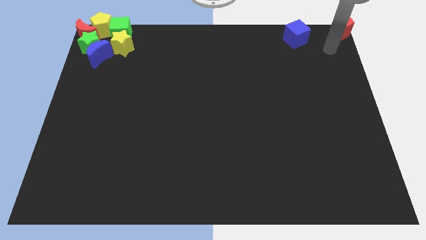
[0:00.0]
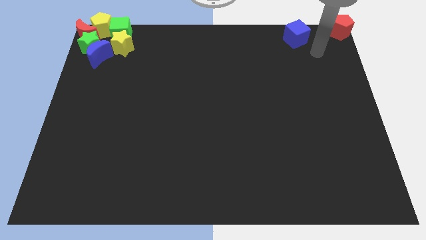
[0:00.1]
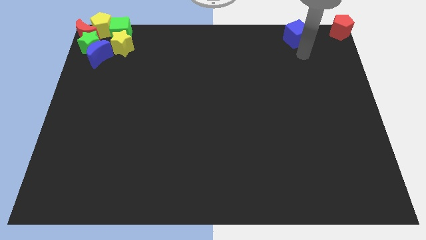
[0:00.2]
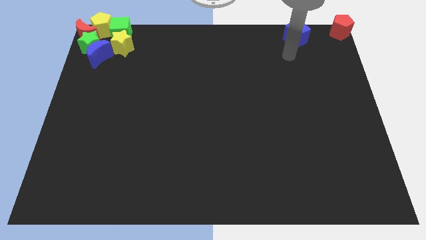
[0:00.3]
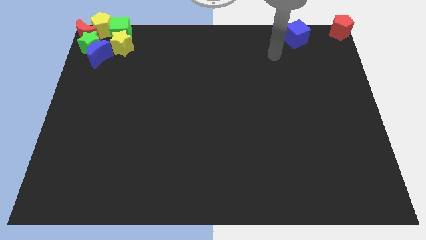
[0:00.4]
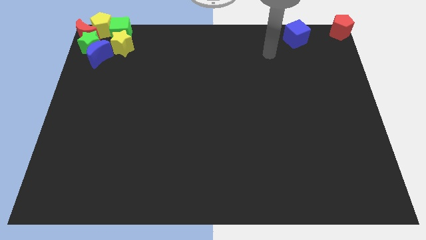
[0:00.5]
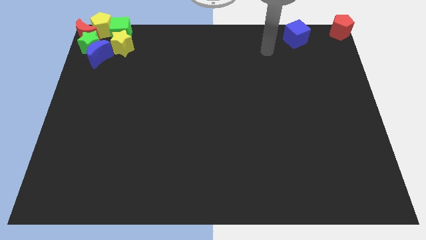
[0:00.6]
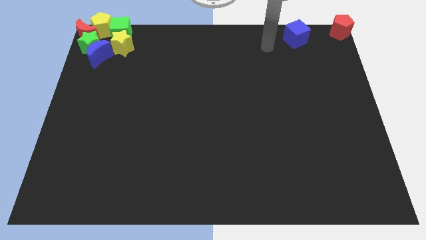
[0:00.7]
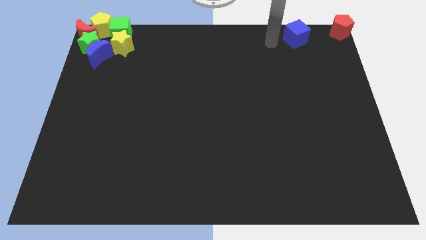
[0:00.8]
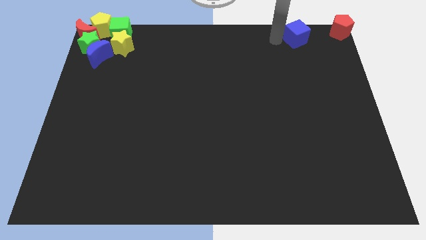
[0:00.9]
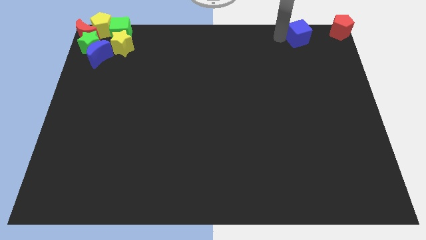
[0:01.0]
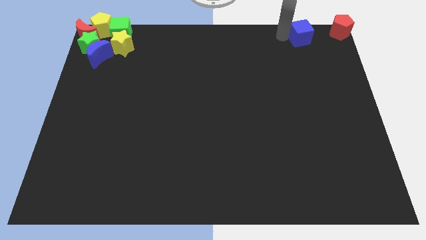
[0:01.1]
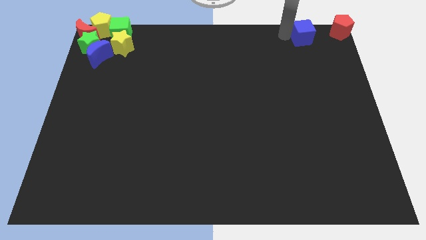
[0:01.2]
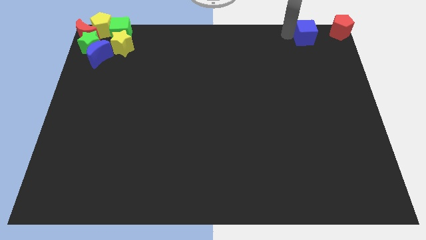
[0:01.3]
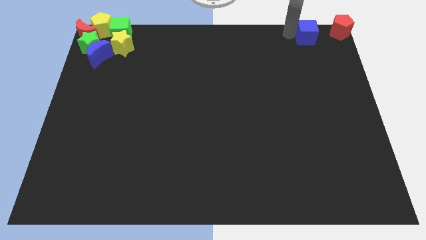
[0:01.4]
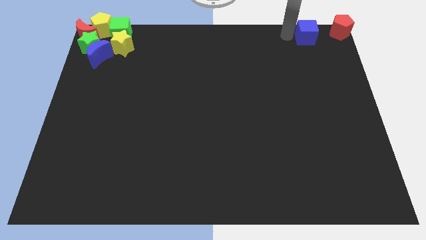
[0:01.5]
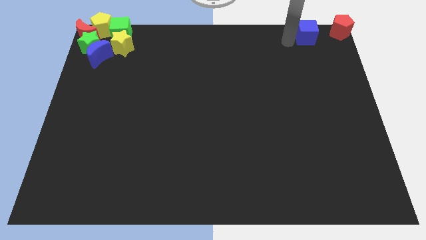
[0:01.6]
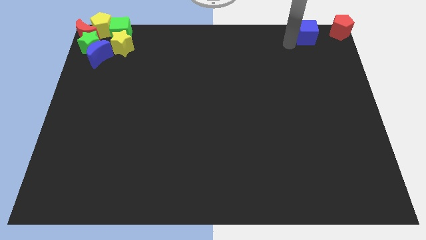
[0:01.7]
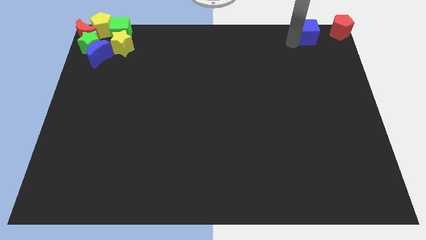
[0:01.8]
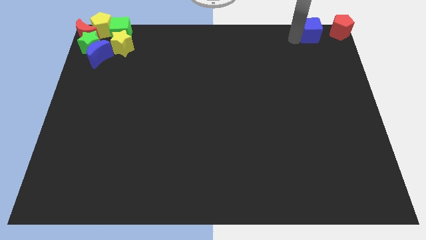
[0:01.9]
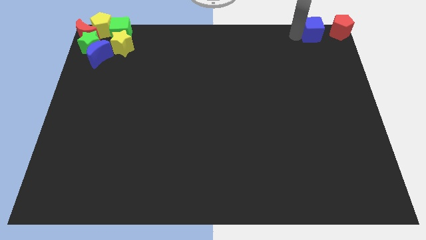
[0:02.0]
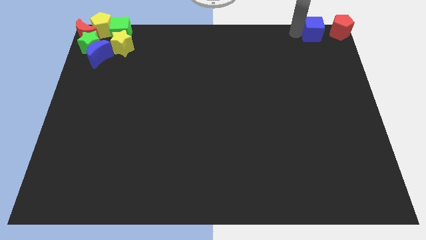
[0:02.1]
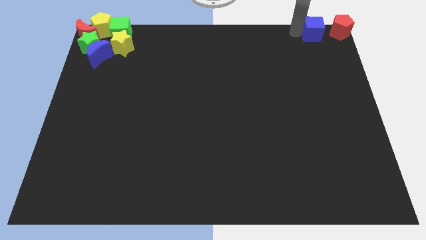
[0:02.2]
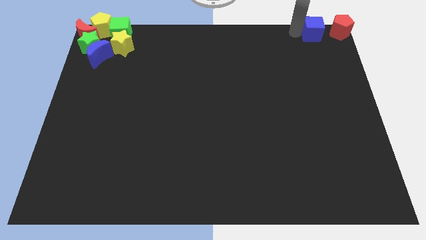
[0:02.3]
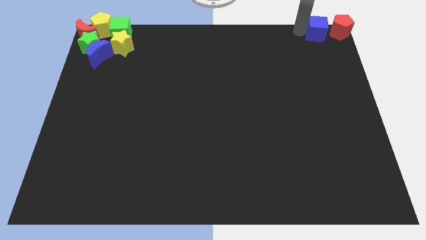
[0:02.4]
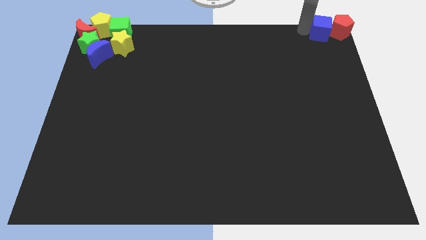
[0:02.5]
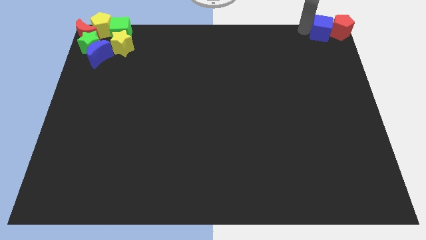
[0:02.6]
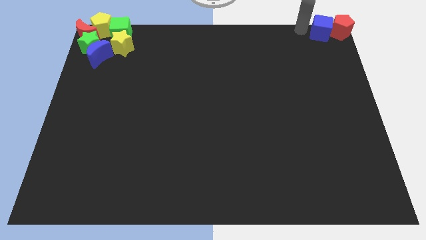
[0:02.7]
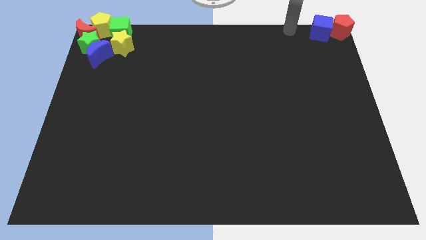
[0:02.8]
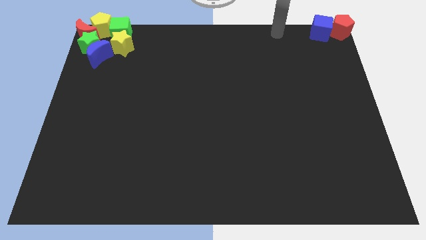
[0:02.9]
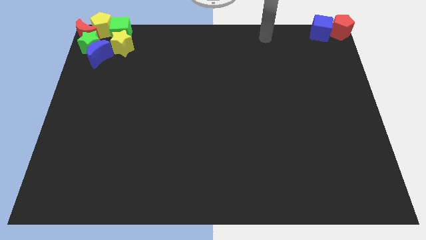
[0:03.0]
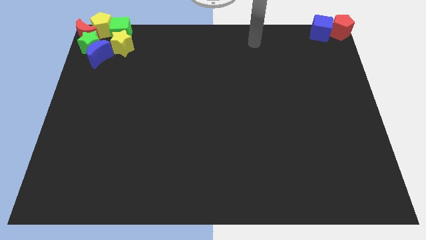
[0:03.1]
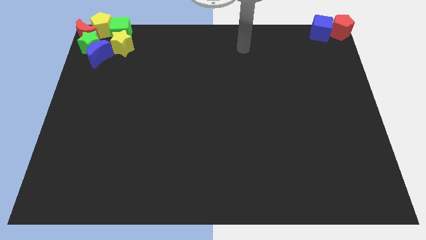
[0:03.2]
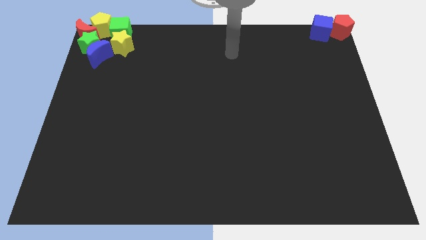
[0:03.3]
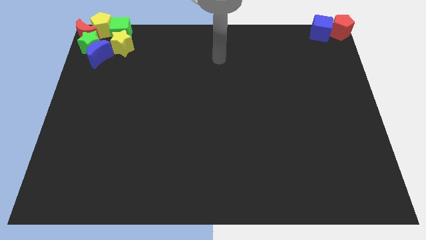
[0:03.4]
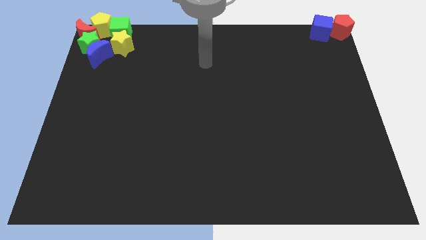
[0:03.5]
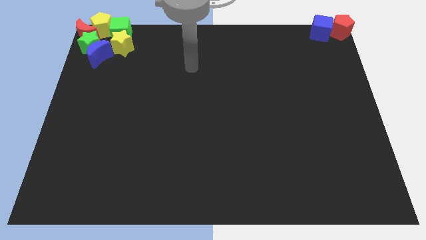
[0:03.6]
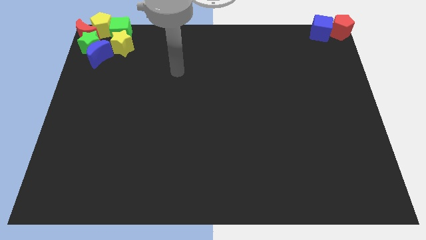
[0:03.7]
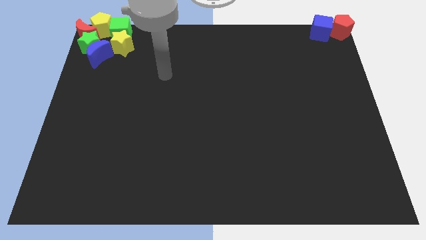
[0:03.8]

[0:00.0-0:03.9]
push the blue cube into the left side of the red pentagon

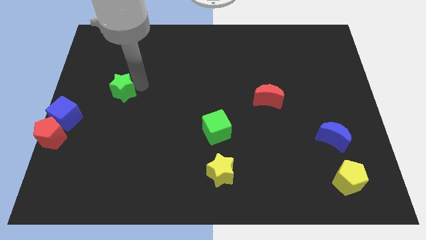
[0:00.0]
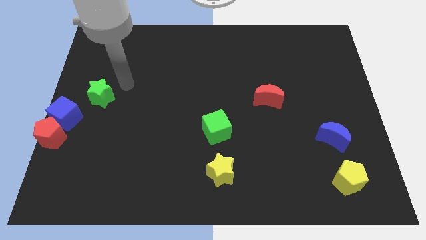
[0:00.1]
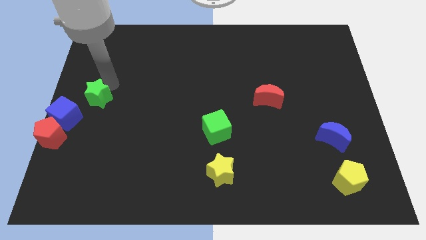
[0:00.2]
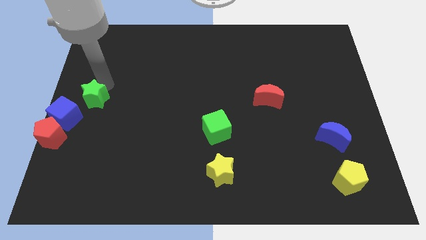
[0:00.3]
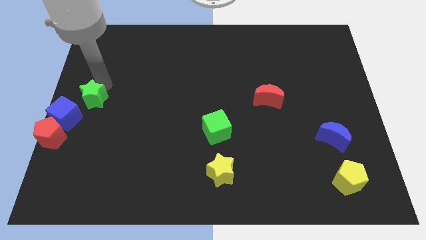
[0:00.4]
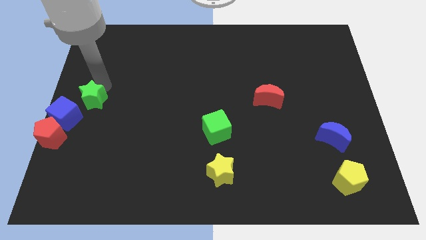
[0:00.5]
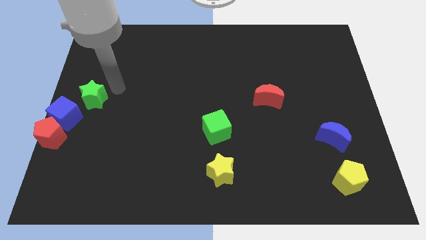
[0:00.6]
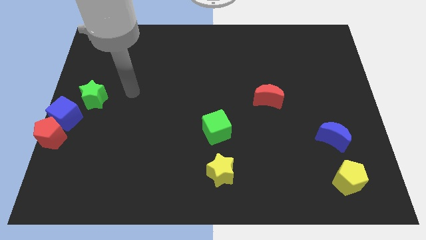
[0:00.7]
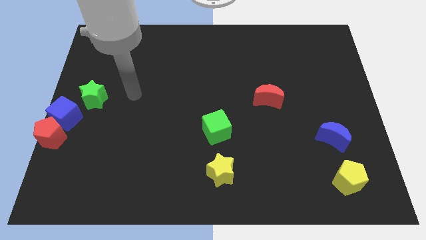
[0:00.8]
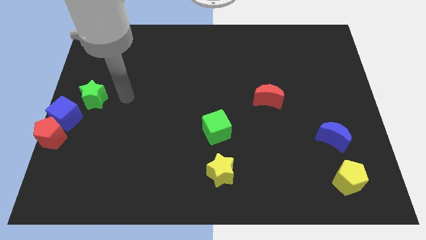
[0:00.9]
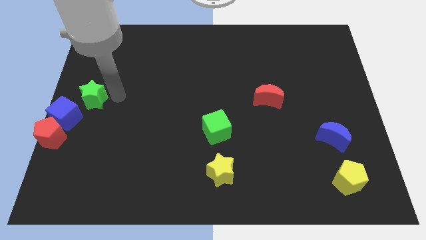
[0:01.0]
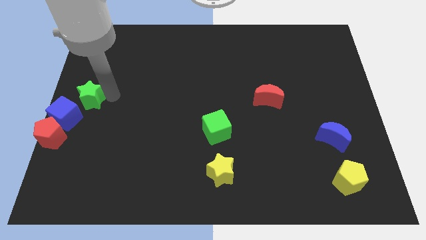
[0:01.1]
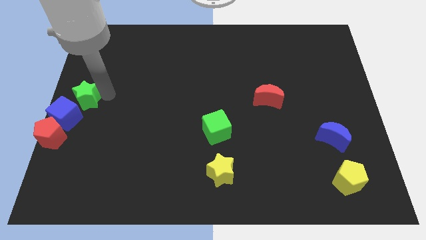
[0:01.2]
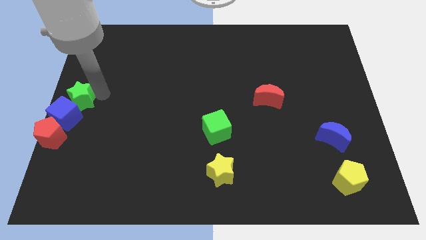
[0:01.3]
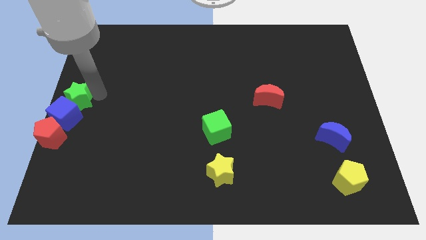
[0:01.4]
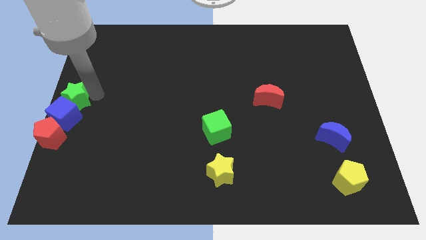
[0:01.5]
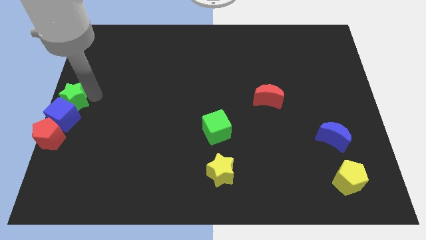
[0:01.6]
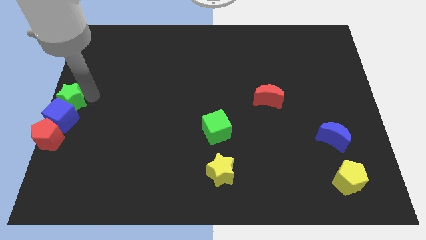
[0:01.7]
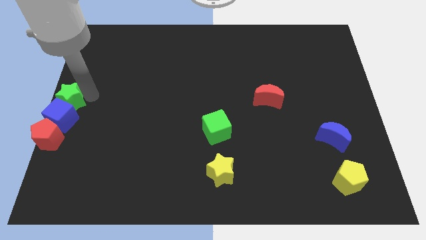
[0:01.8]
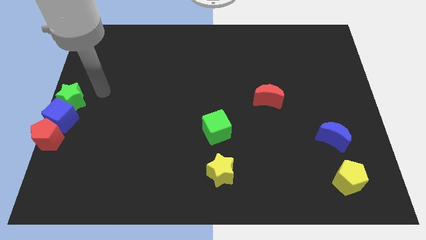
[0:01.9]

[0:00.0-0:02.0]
push the green star on top of the blue cube

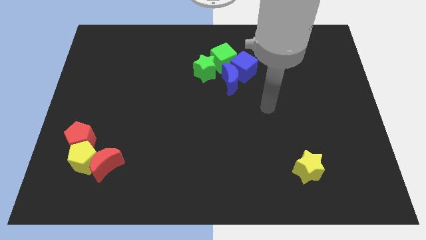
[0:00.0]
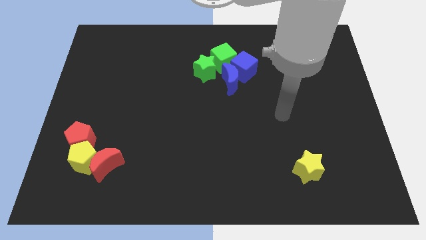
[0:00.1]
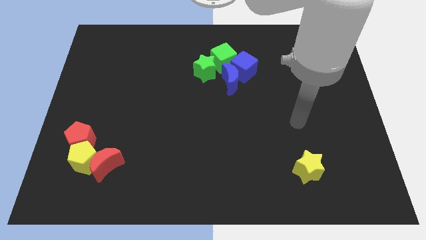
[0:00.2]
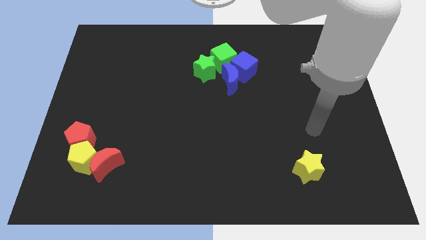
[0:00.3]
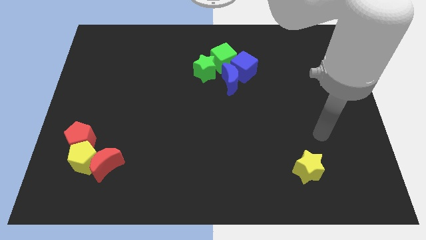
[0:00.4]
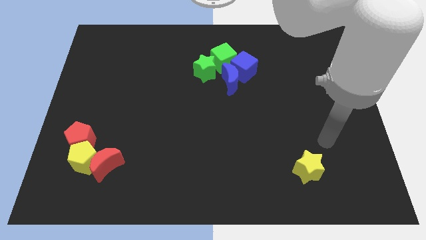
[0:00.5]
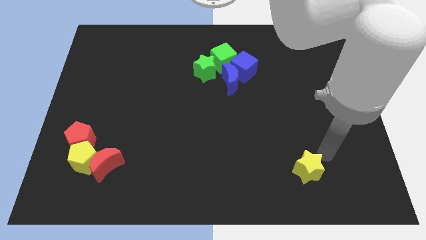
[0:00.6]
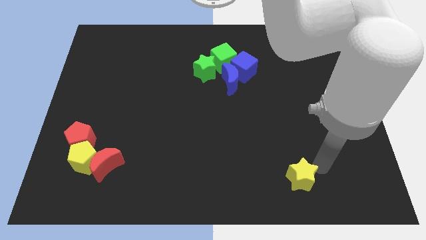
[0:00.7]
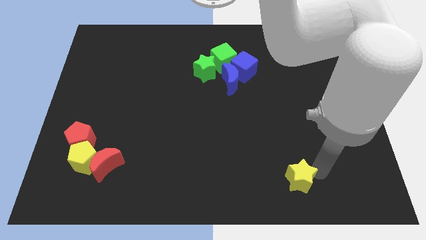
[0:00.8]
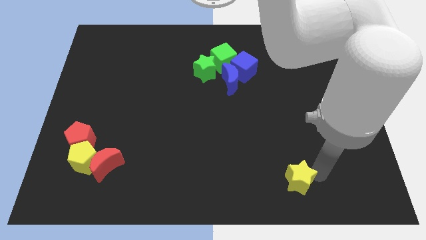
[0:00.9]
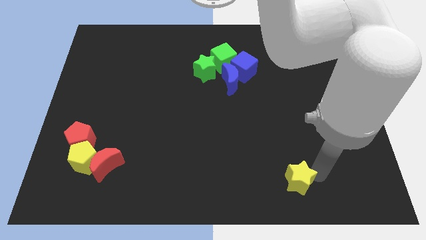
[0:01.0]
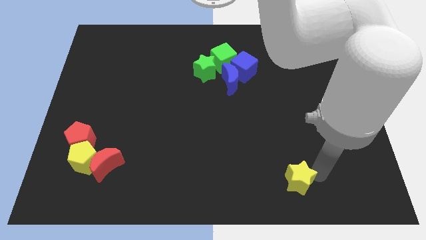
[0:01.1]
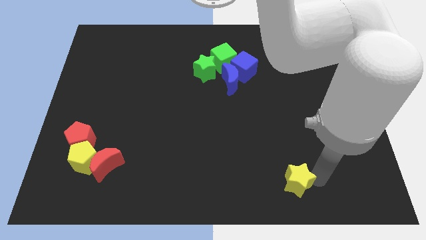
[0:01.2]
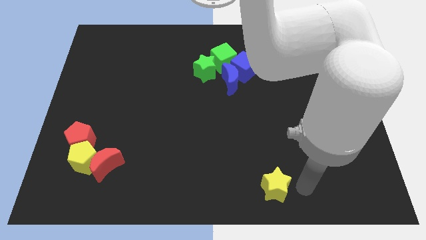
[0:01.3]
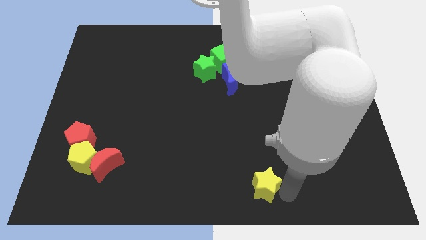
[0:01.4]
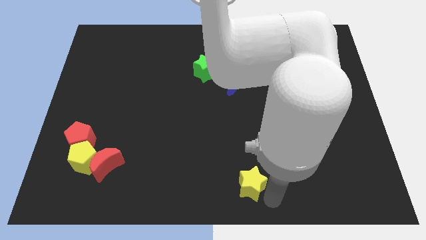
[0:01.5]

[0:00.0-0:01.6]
move the yellow star slightly down

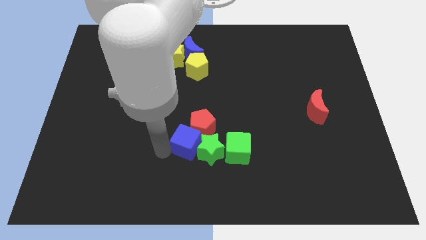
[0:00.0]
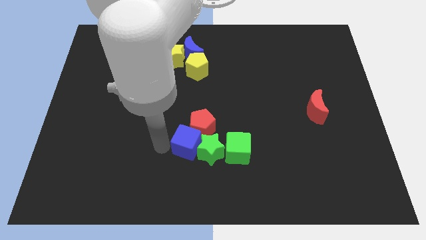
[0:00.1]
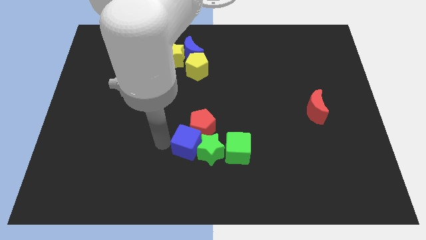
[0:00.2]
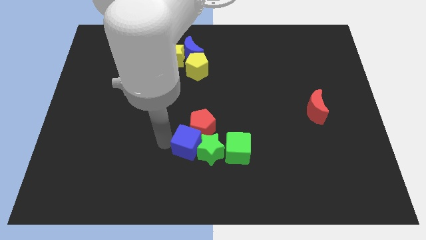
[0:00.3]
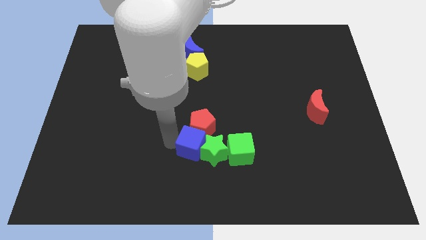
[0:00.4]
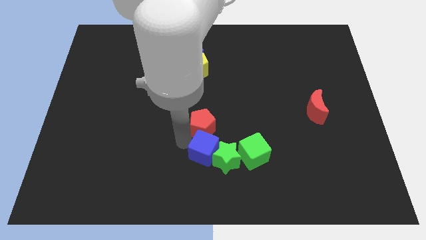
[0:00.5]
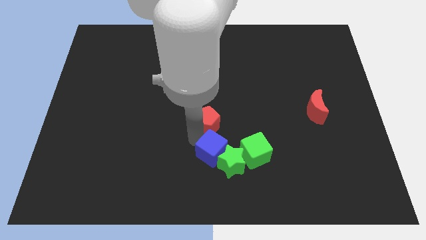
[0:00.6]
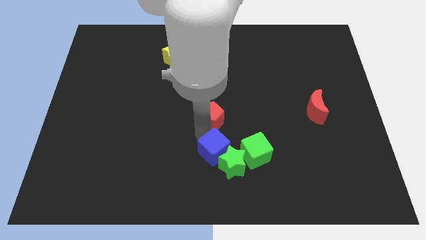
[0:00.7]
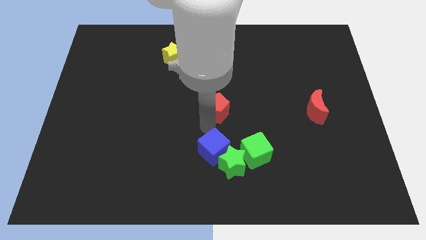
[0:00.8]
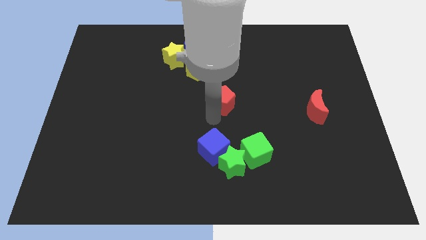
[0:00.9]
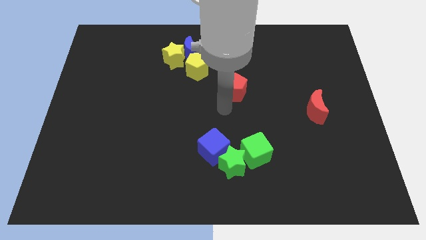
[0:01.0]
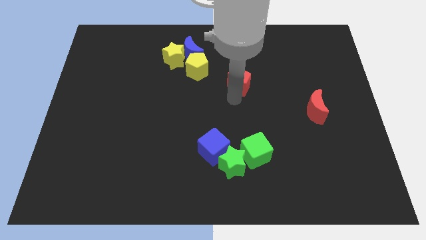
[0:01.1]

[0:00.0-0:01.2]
separate red pentagon from blue cube

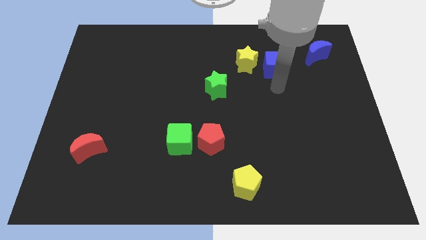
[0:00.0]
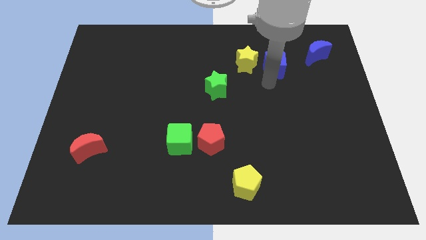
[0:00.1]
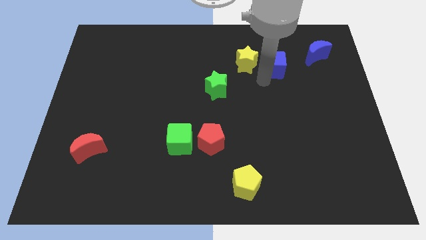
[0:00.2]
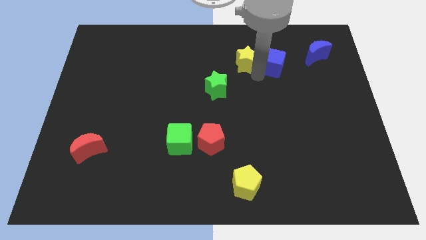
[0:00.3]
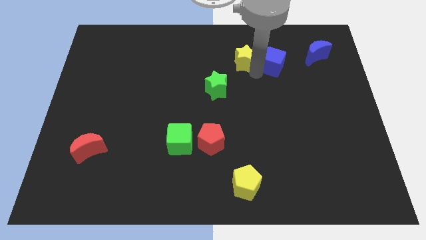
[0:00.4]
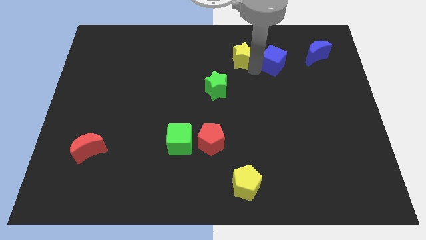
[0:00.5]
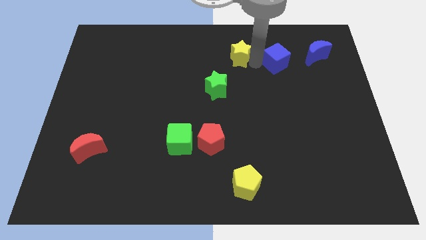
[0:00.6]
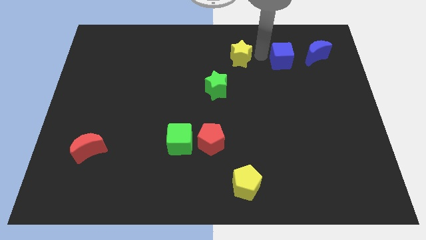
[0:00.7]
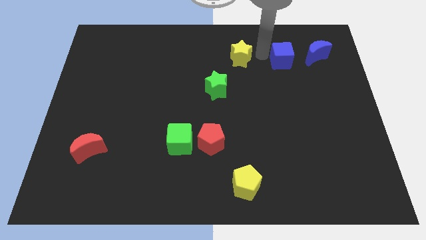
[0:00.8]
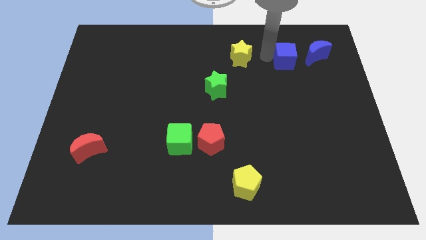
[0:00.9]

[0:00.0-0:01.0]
push the yellow star and blue cube in different directions
